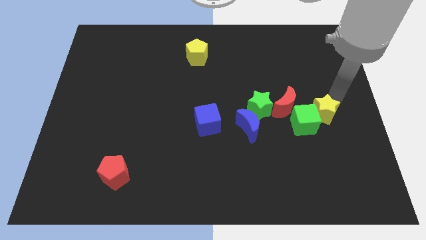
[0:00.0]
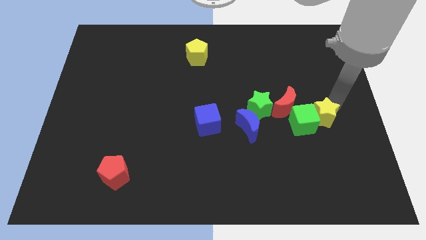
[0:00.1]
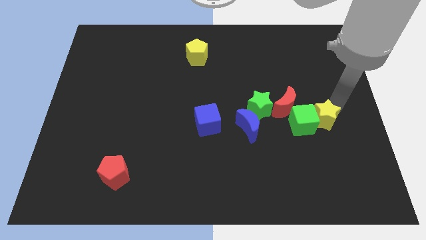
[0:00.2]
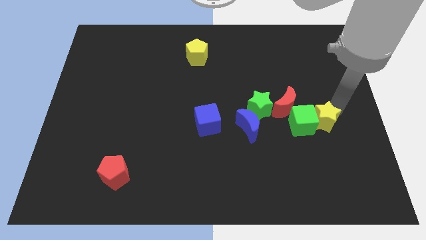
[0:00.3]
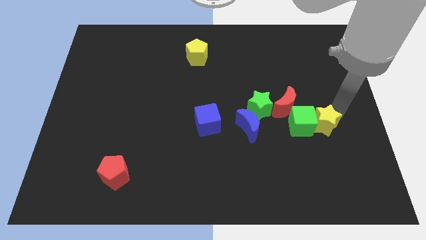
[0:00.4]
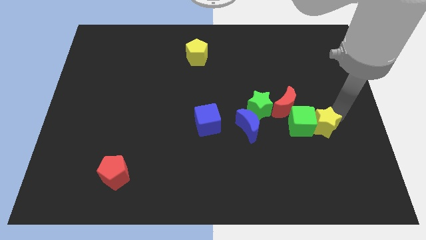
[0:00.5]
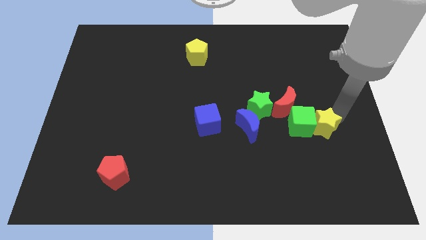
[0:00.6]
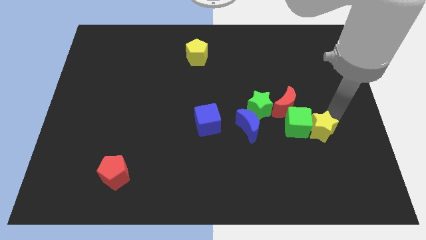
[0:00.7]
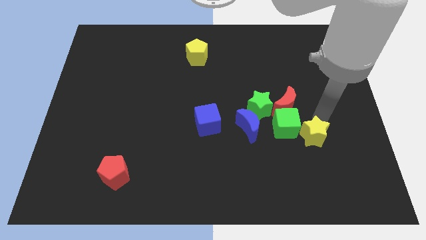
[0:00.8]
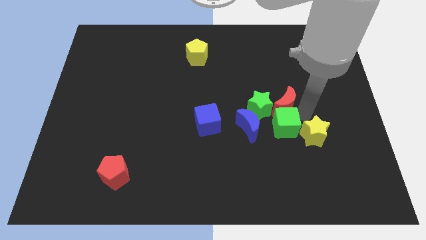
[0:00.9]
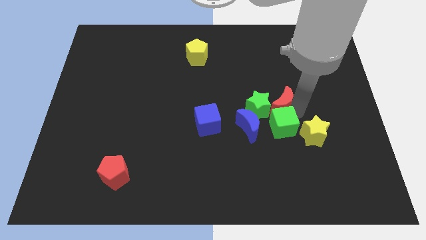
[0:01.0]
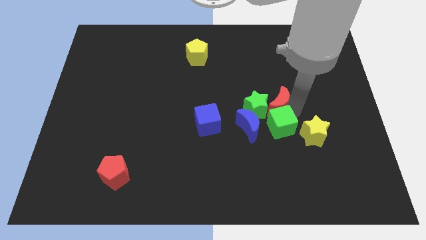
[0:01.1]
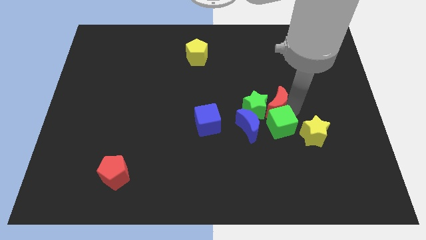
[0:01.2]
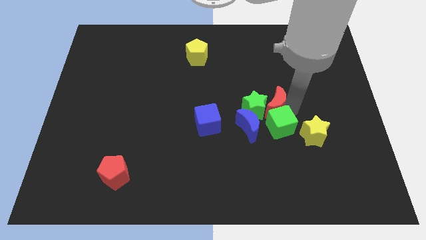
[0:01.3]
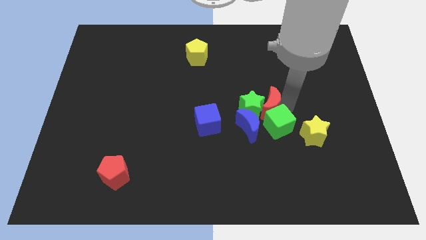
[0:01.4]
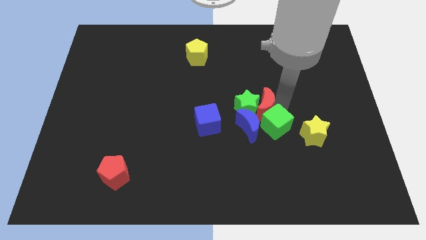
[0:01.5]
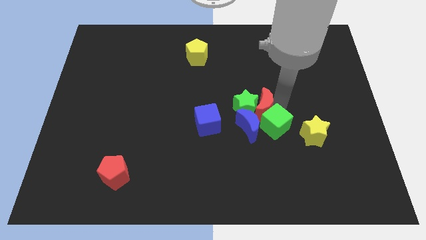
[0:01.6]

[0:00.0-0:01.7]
separate the yellow star and green cube

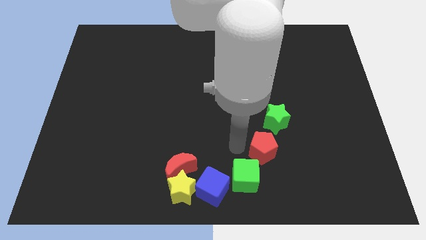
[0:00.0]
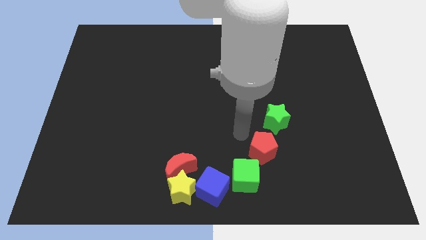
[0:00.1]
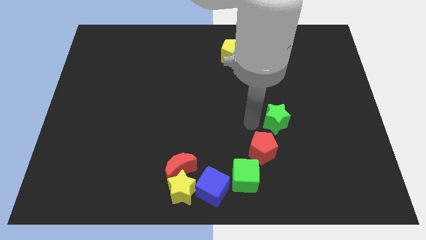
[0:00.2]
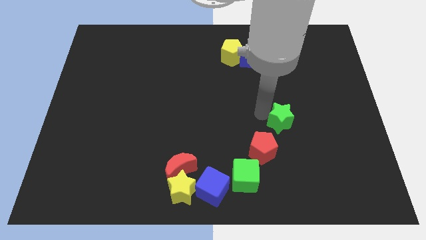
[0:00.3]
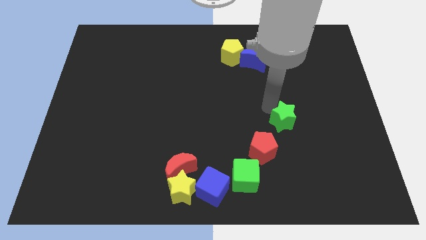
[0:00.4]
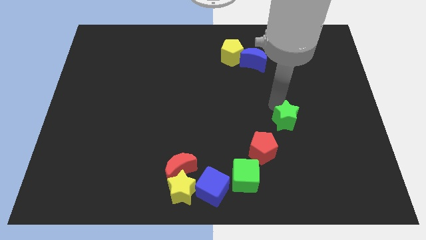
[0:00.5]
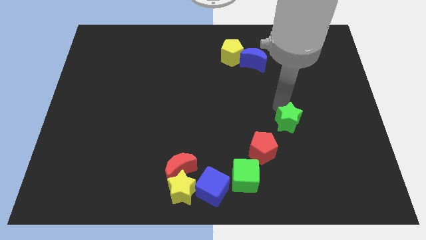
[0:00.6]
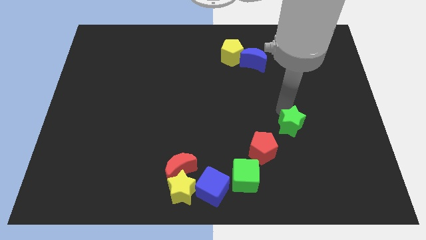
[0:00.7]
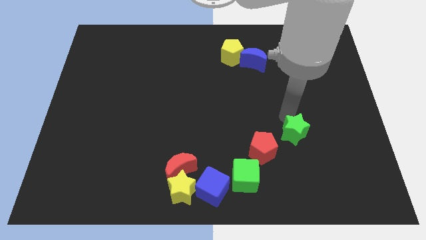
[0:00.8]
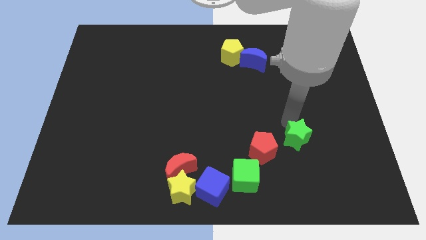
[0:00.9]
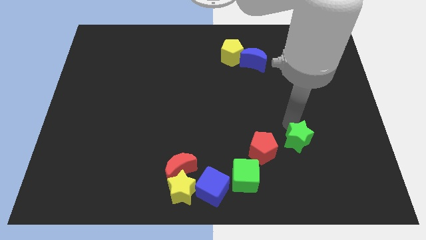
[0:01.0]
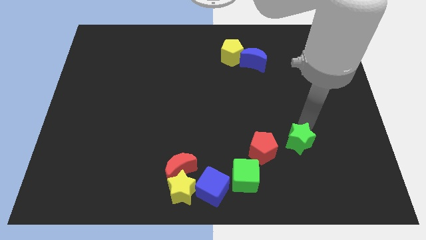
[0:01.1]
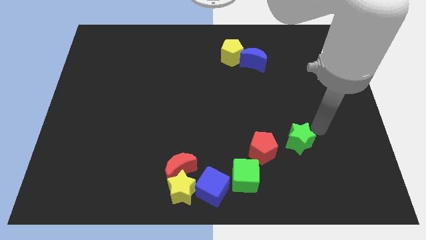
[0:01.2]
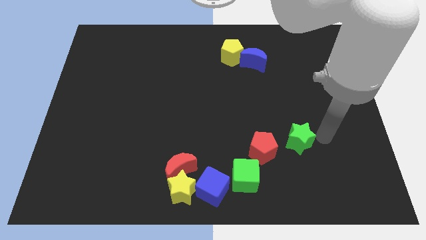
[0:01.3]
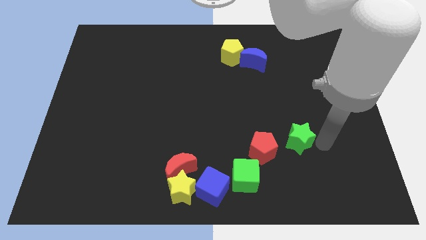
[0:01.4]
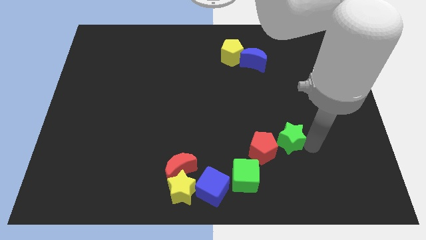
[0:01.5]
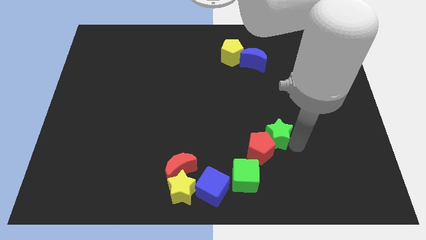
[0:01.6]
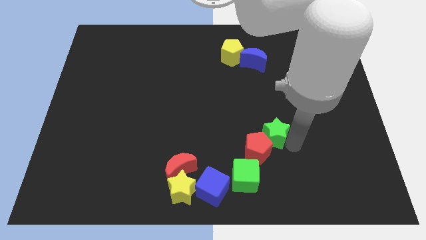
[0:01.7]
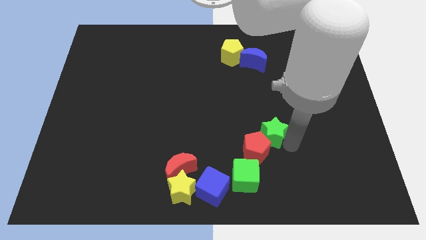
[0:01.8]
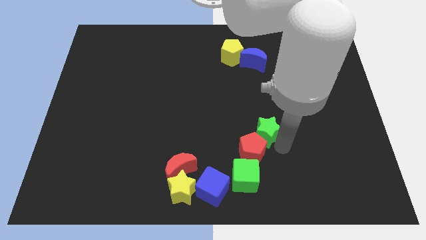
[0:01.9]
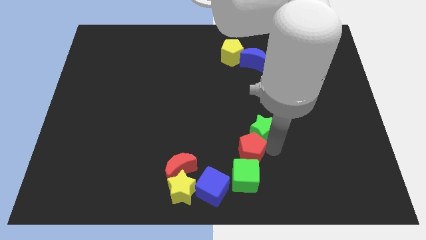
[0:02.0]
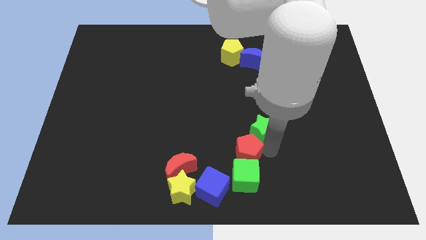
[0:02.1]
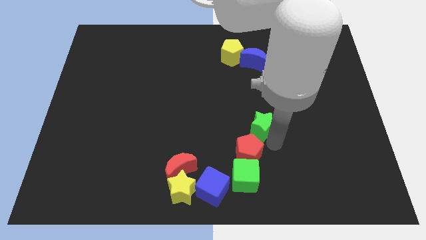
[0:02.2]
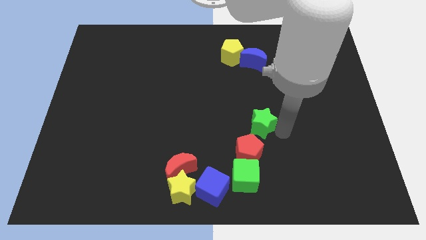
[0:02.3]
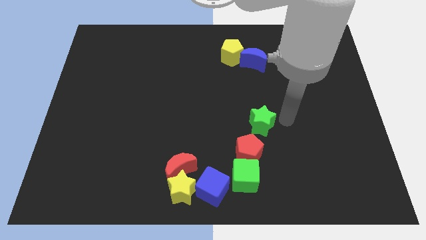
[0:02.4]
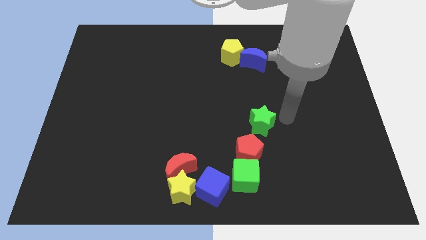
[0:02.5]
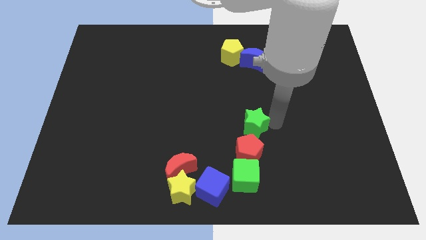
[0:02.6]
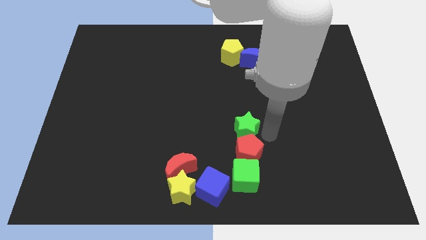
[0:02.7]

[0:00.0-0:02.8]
place the green star on top of red pentagon

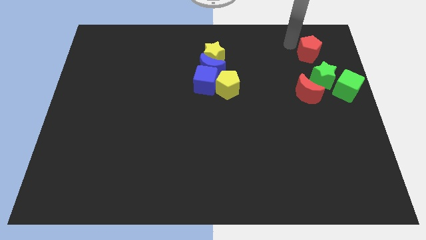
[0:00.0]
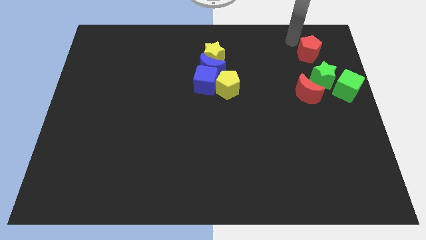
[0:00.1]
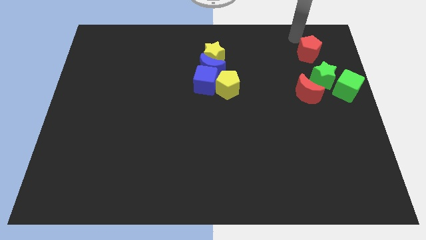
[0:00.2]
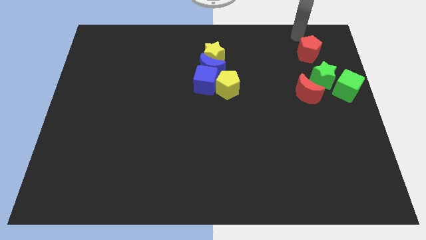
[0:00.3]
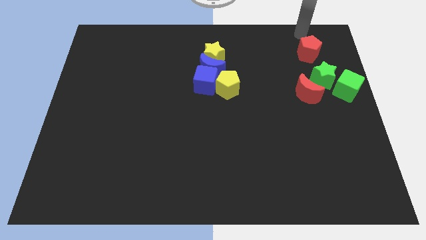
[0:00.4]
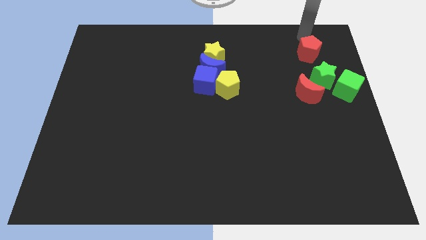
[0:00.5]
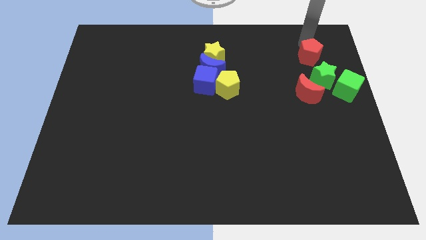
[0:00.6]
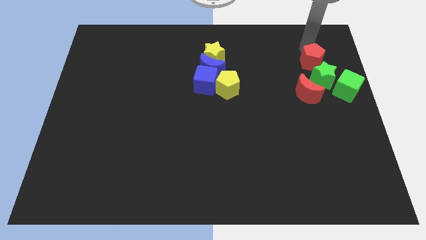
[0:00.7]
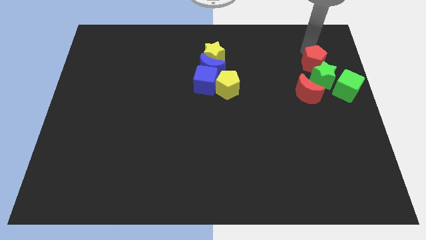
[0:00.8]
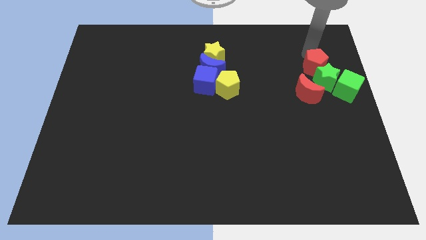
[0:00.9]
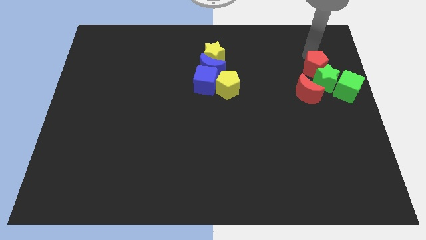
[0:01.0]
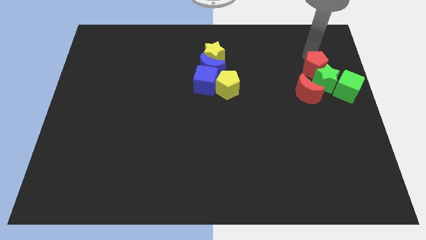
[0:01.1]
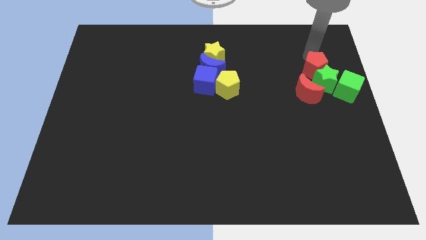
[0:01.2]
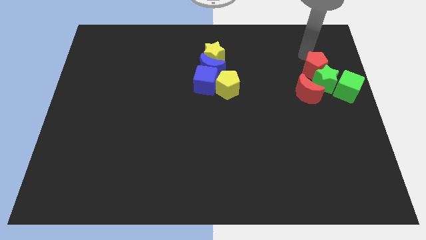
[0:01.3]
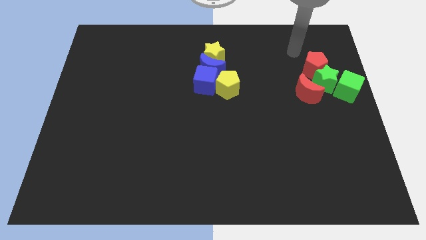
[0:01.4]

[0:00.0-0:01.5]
move the red pentagon into the green star

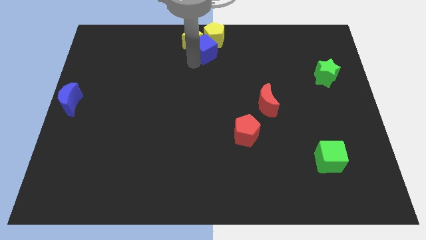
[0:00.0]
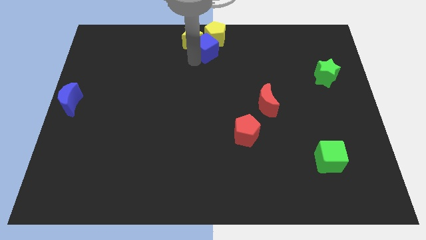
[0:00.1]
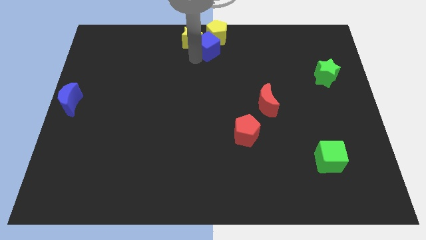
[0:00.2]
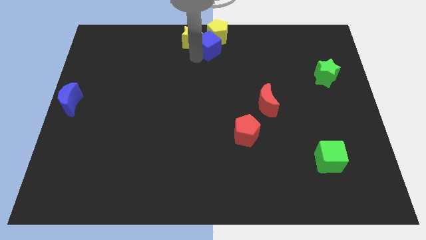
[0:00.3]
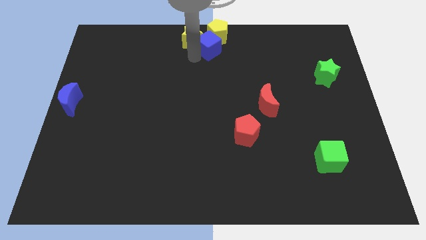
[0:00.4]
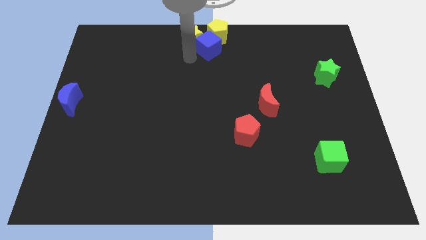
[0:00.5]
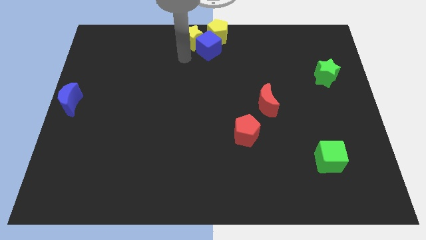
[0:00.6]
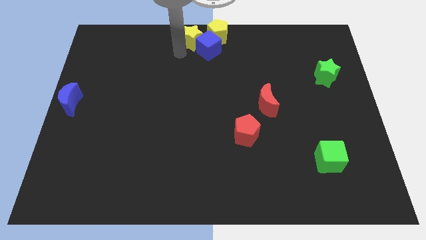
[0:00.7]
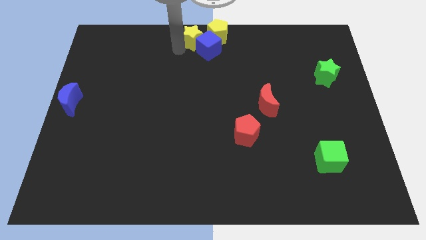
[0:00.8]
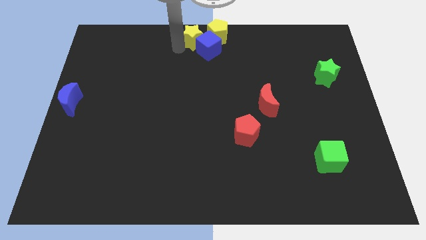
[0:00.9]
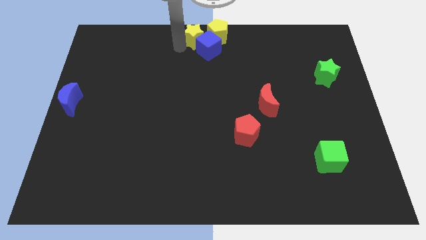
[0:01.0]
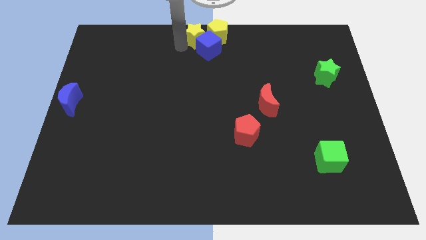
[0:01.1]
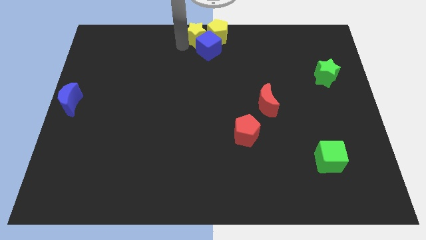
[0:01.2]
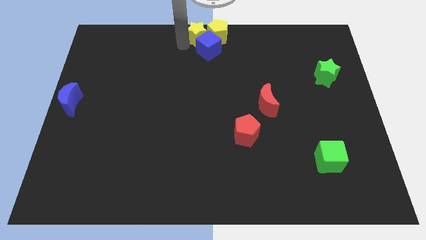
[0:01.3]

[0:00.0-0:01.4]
move the arm around the yellow star

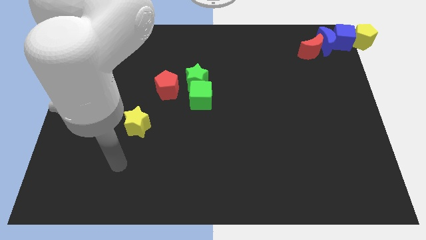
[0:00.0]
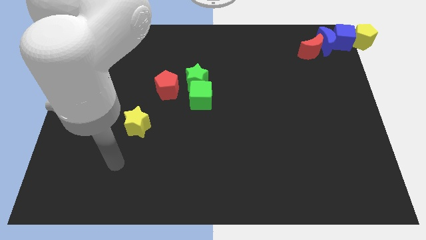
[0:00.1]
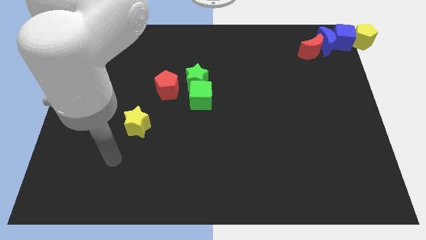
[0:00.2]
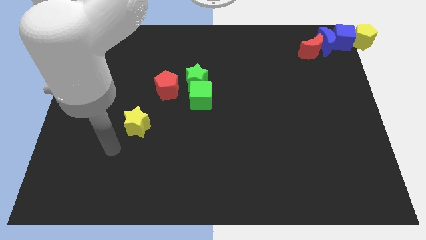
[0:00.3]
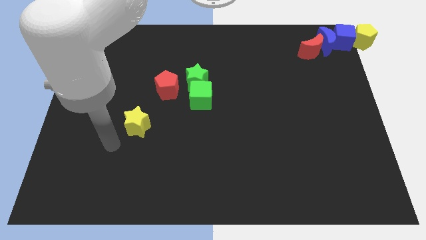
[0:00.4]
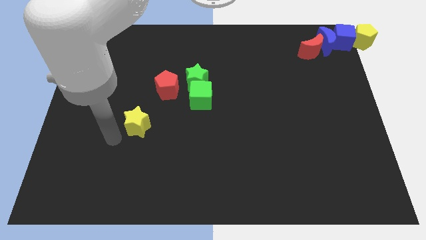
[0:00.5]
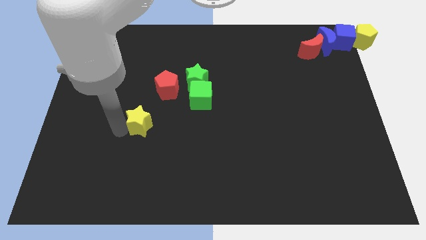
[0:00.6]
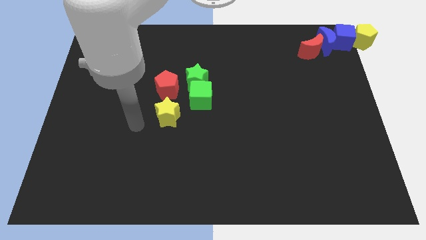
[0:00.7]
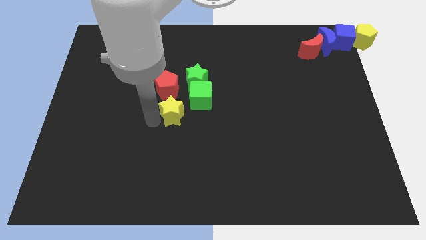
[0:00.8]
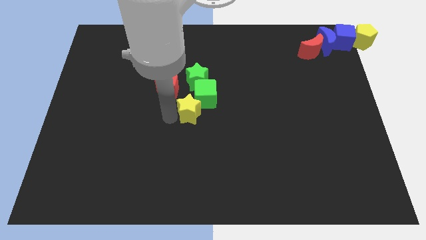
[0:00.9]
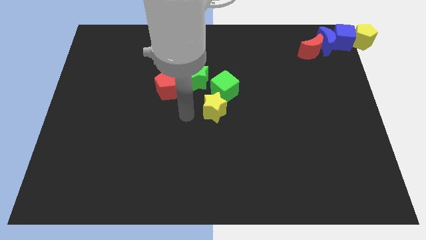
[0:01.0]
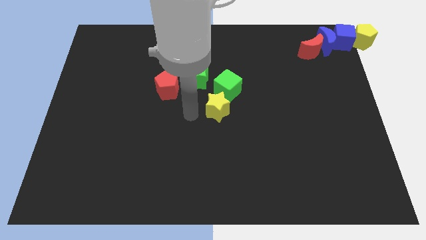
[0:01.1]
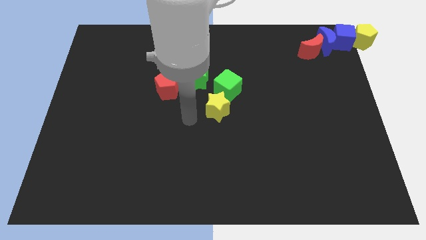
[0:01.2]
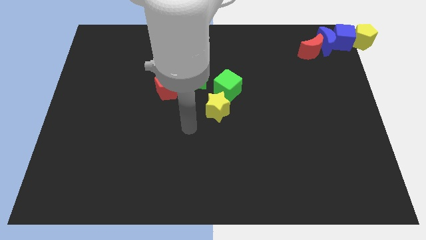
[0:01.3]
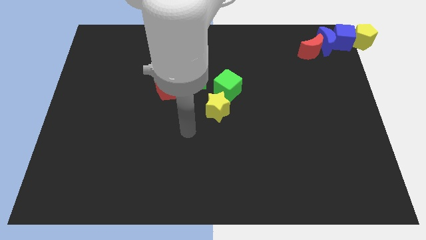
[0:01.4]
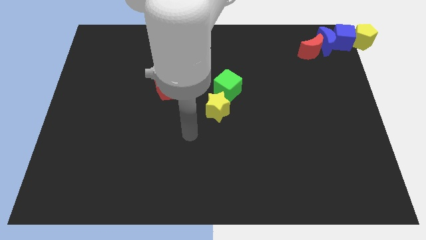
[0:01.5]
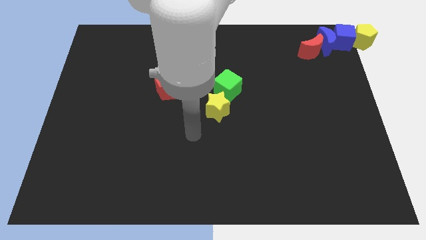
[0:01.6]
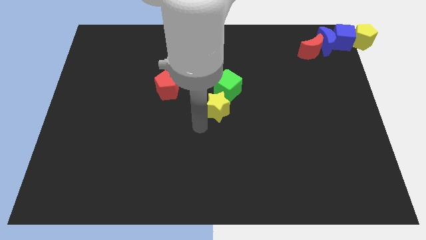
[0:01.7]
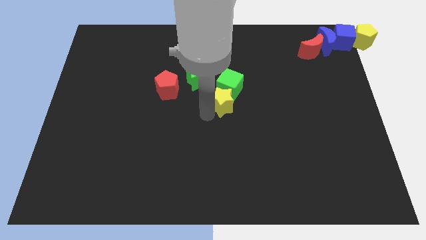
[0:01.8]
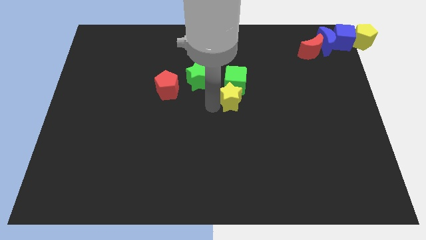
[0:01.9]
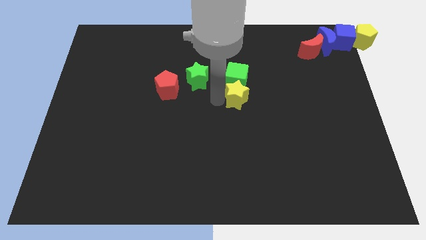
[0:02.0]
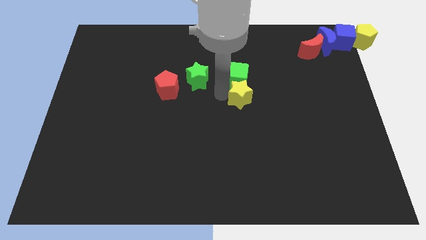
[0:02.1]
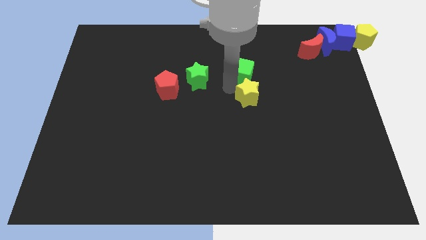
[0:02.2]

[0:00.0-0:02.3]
place the yellow star below the green cube
